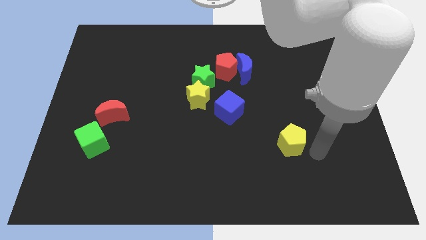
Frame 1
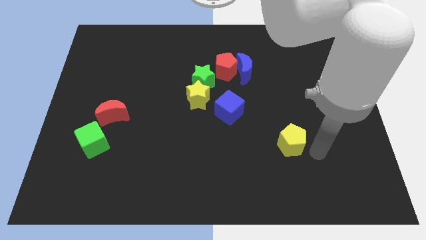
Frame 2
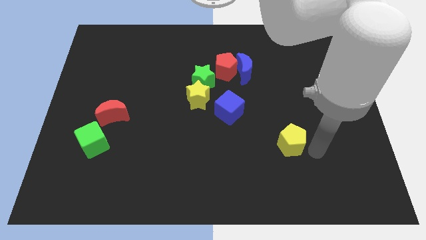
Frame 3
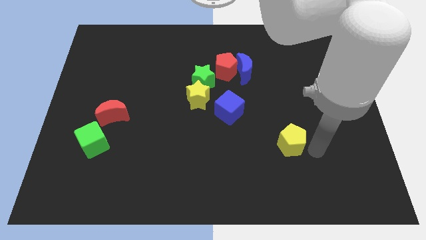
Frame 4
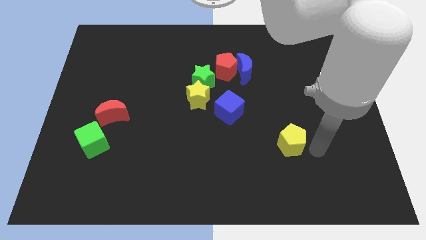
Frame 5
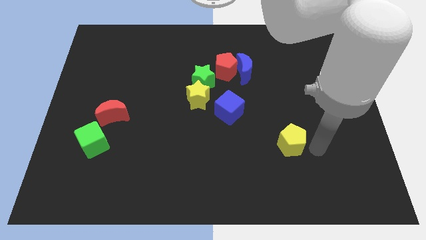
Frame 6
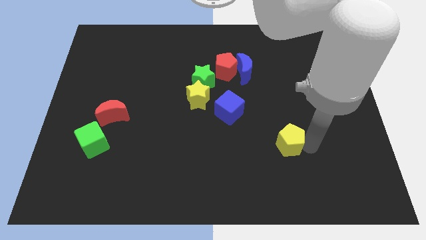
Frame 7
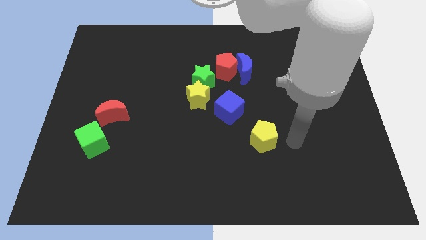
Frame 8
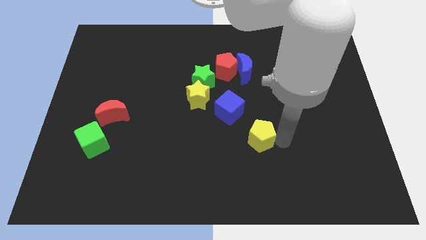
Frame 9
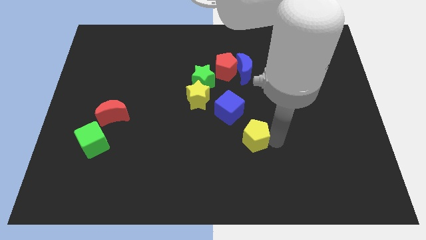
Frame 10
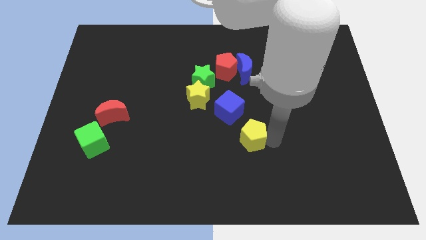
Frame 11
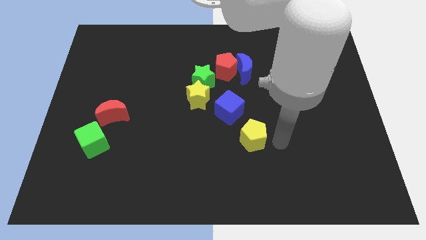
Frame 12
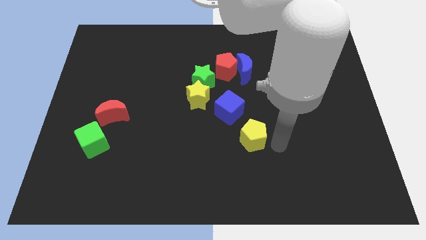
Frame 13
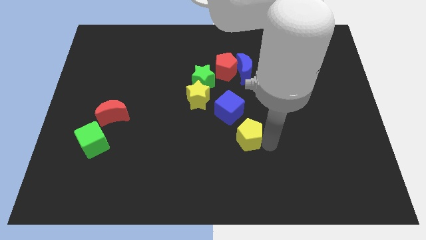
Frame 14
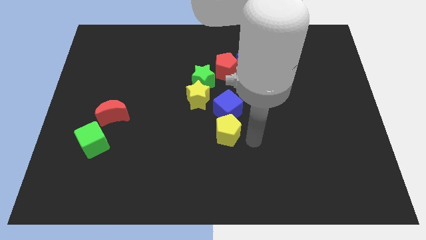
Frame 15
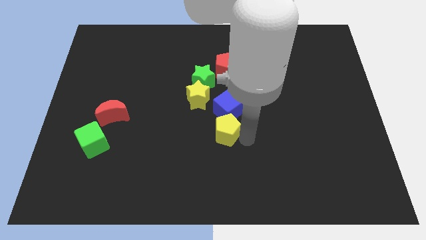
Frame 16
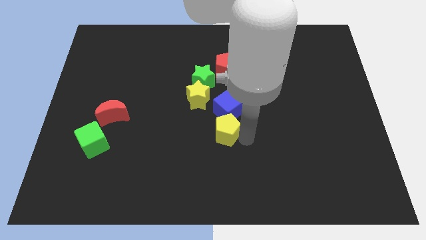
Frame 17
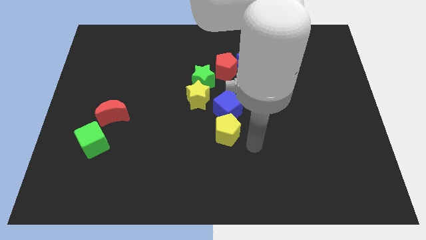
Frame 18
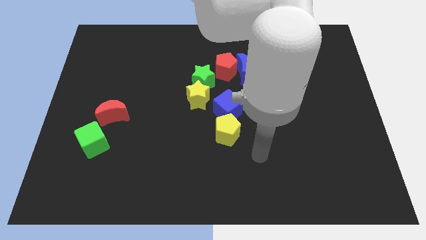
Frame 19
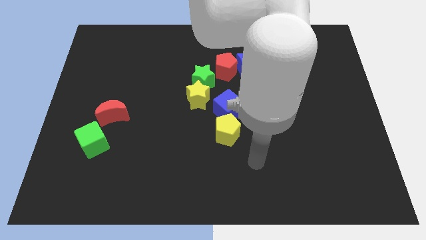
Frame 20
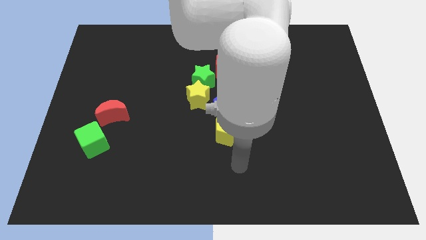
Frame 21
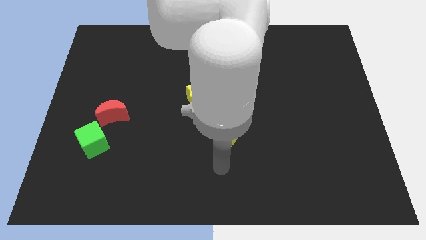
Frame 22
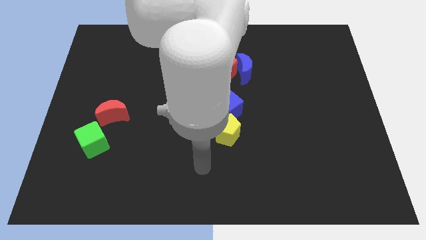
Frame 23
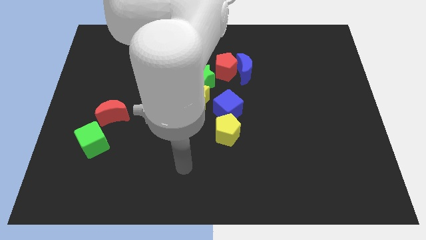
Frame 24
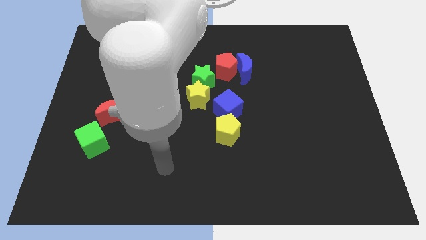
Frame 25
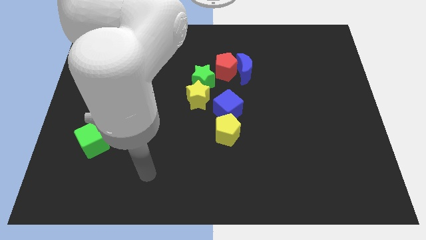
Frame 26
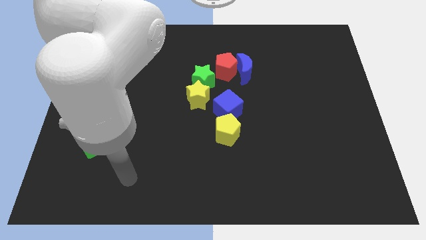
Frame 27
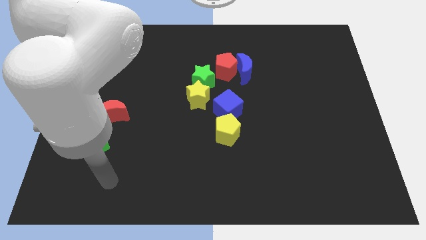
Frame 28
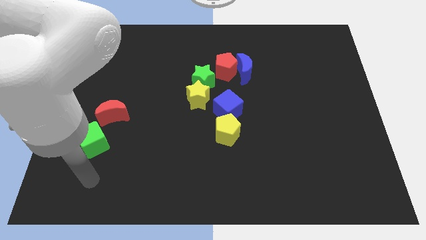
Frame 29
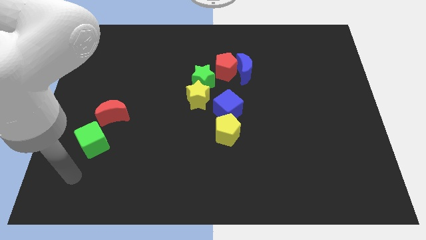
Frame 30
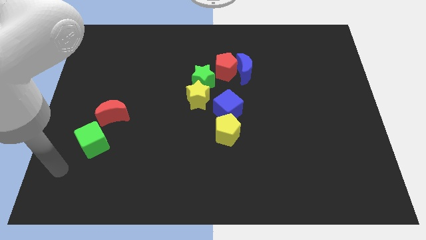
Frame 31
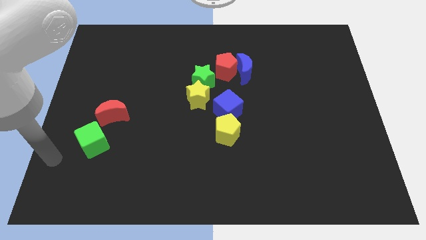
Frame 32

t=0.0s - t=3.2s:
place the yellow pentagon below the blue cube

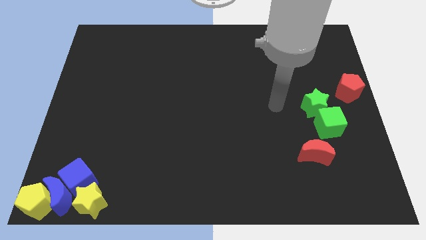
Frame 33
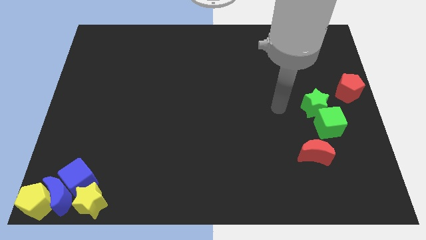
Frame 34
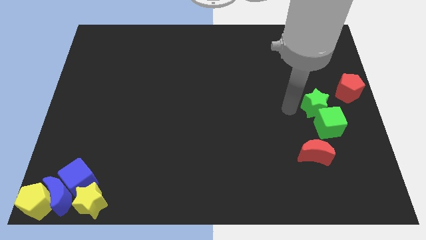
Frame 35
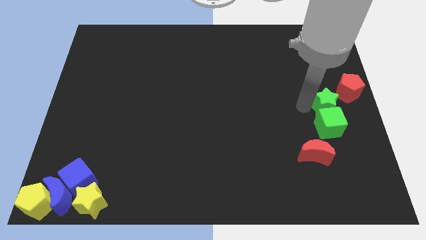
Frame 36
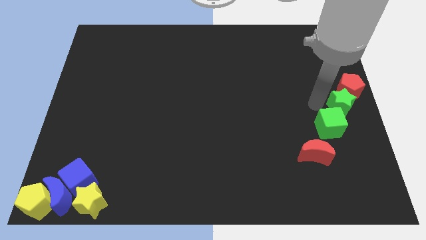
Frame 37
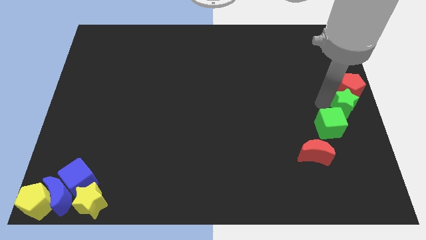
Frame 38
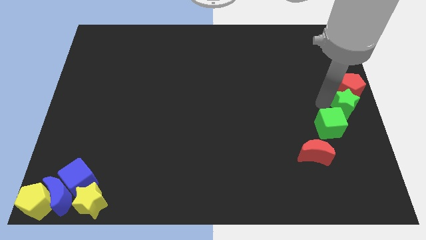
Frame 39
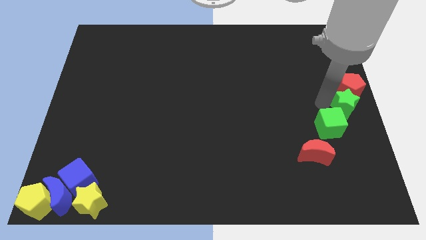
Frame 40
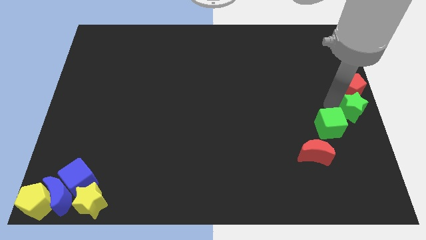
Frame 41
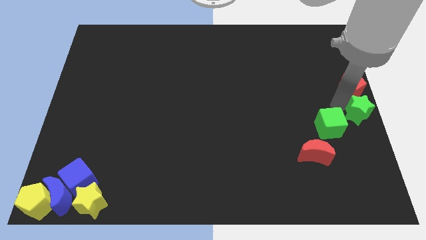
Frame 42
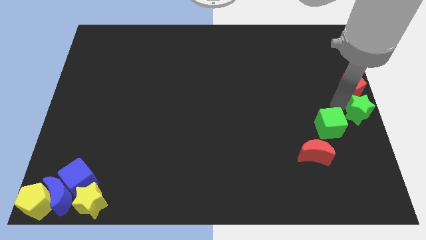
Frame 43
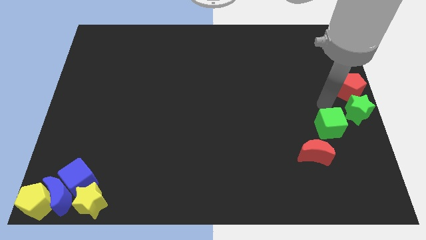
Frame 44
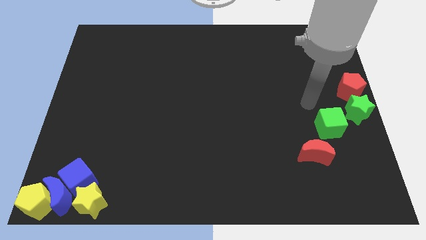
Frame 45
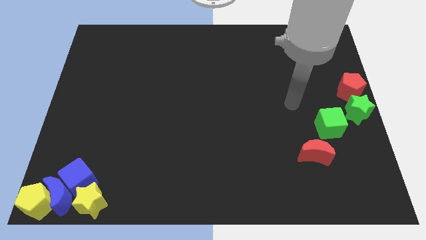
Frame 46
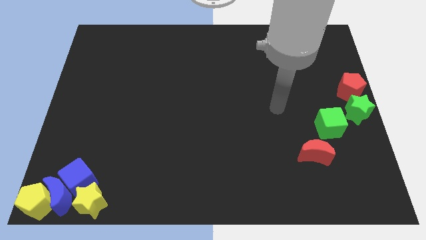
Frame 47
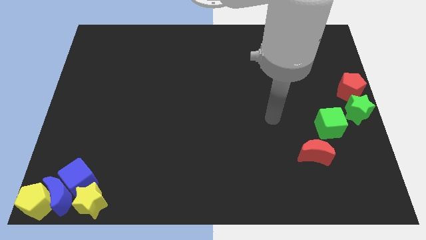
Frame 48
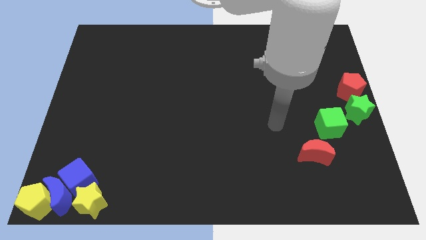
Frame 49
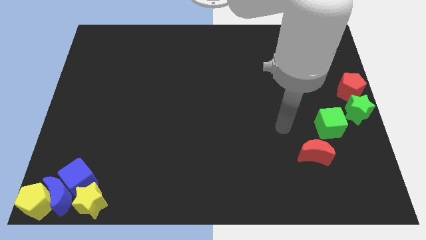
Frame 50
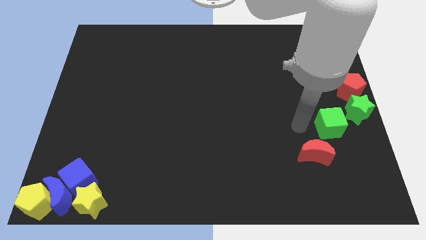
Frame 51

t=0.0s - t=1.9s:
move the green star below the red pentagon

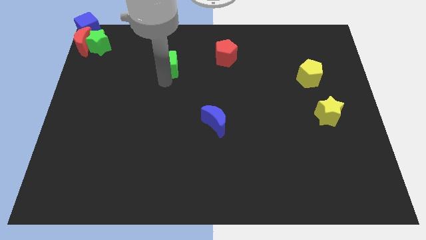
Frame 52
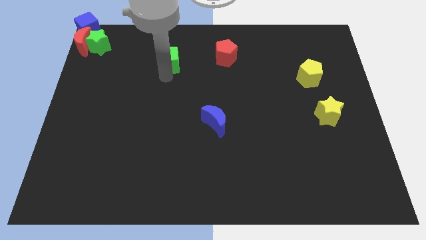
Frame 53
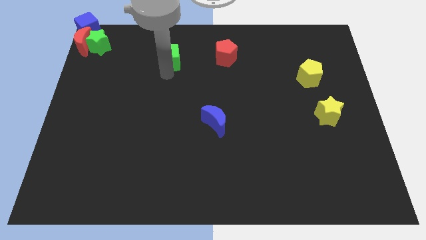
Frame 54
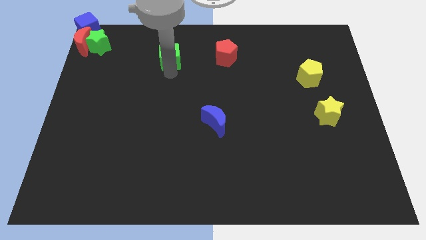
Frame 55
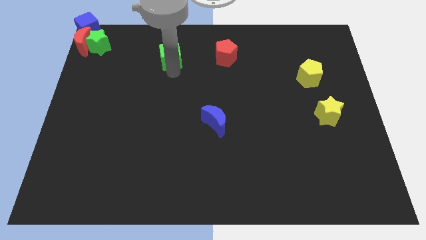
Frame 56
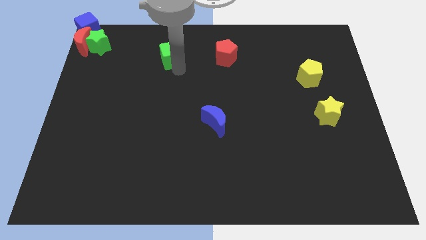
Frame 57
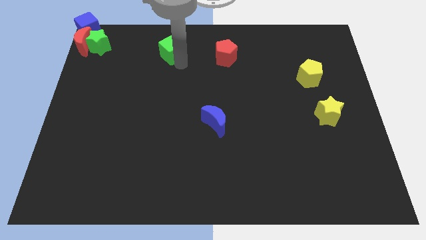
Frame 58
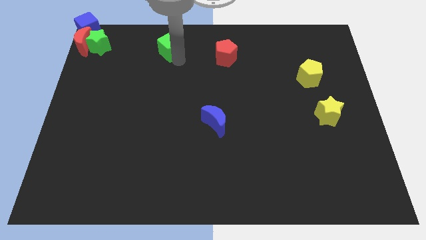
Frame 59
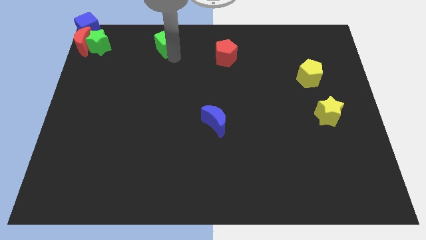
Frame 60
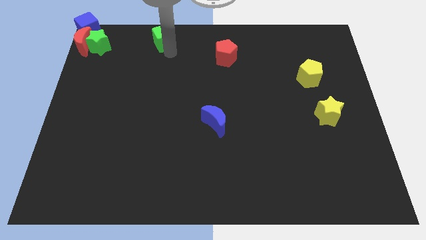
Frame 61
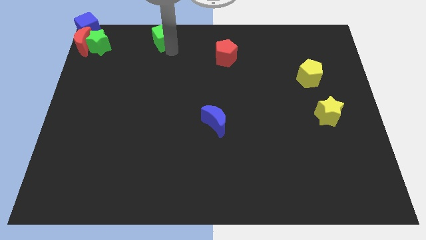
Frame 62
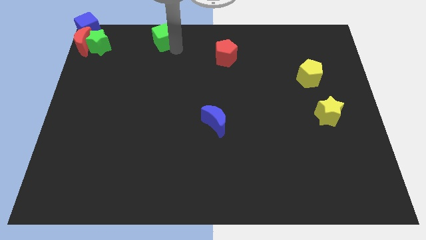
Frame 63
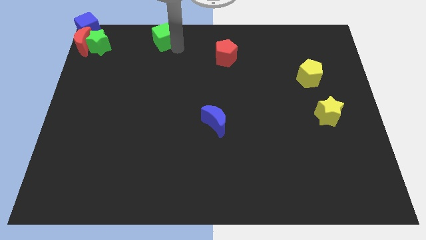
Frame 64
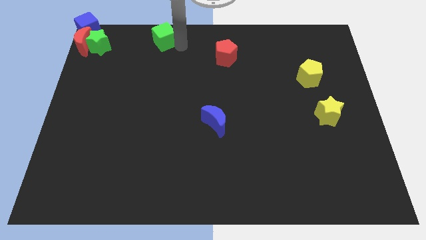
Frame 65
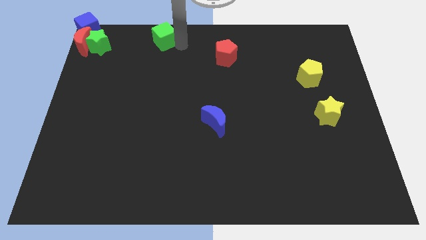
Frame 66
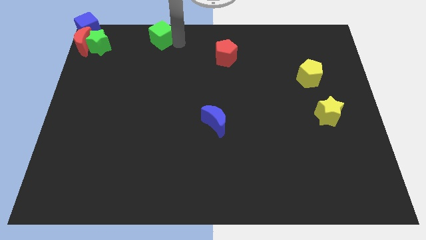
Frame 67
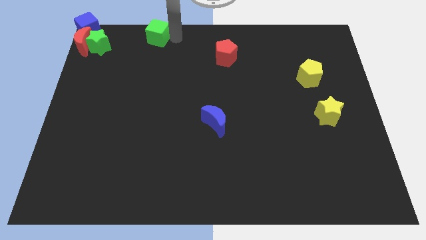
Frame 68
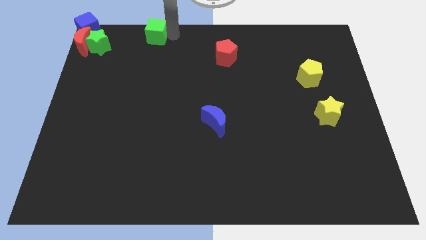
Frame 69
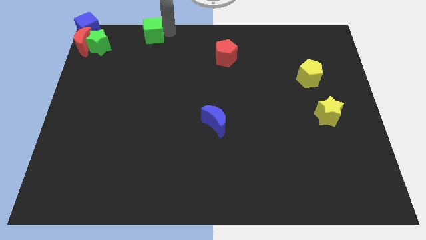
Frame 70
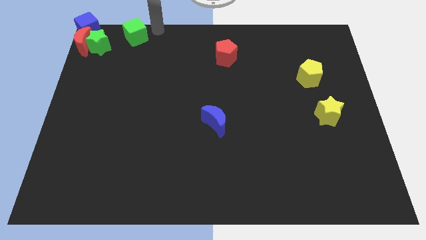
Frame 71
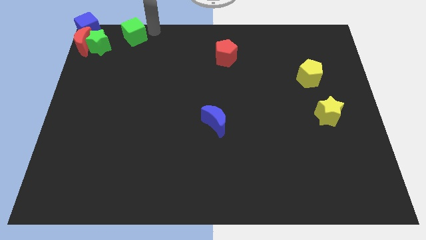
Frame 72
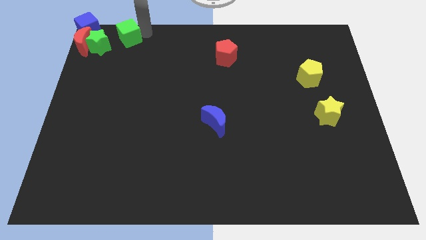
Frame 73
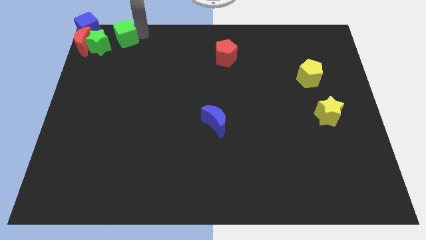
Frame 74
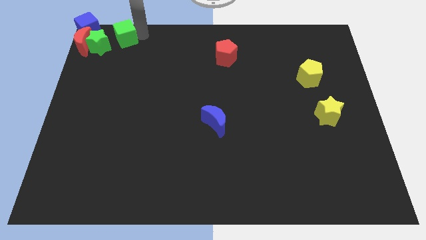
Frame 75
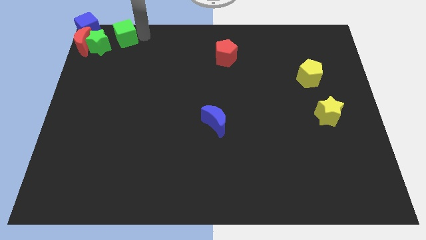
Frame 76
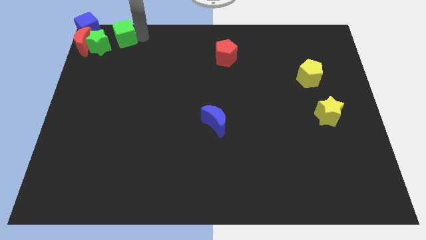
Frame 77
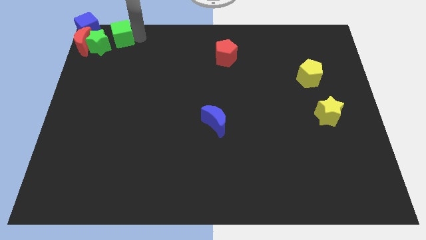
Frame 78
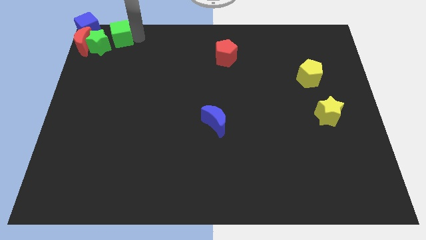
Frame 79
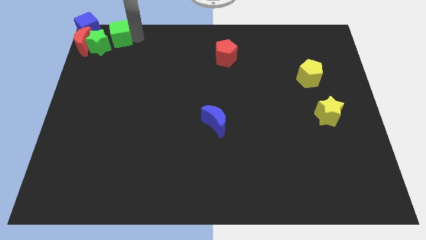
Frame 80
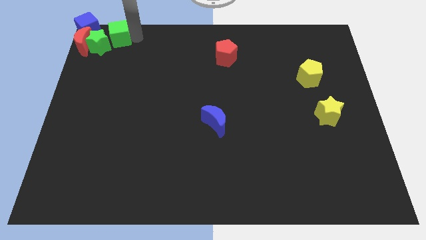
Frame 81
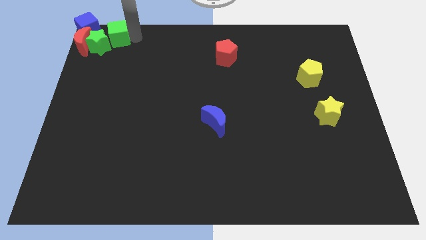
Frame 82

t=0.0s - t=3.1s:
bring the green cube at the right side of the green star

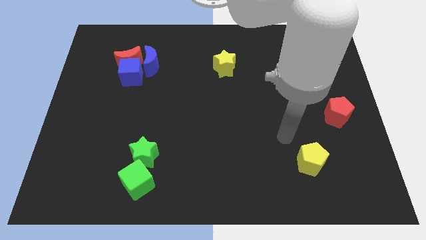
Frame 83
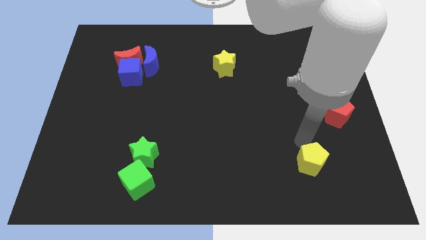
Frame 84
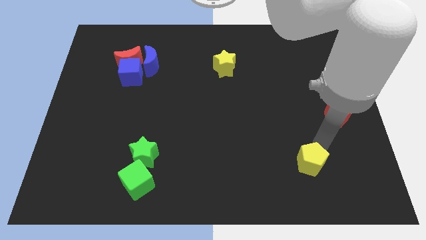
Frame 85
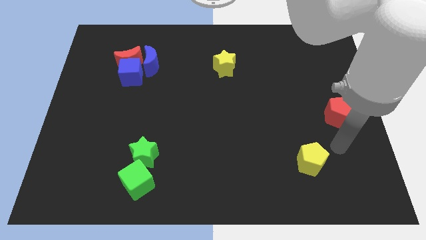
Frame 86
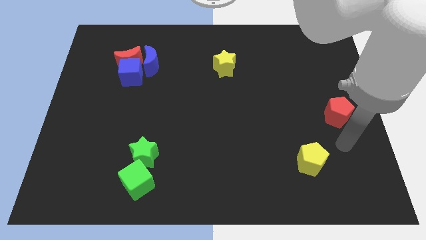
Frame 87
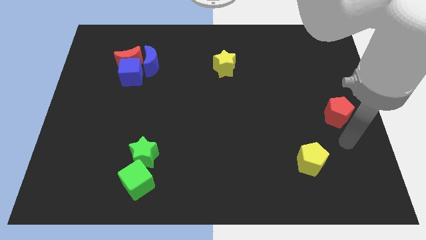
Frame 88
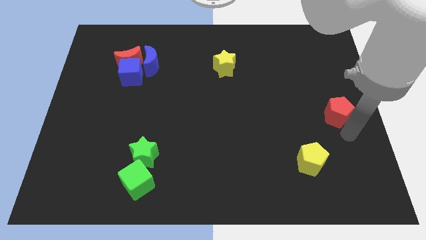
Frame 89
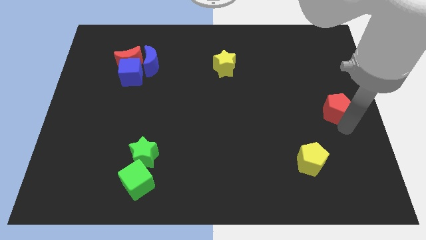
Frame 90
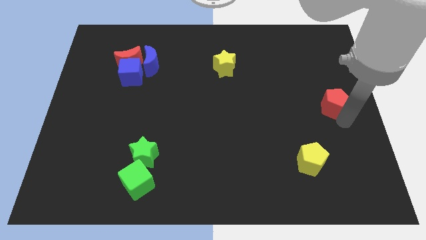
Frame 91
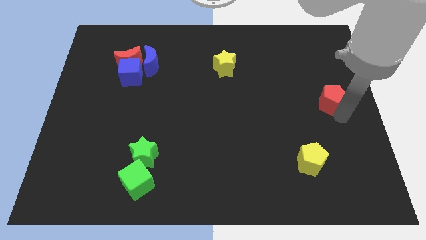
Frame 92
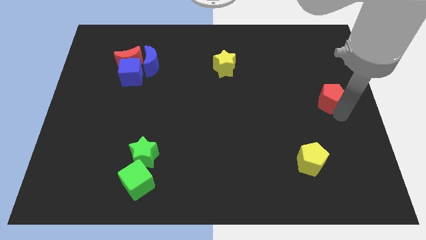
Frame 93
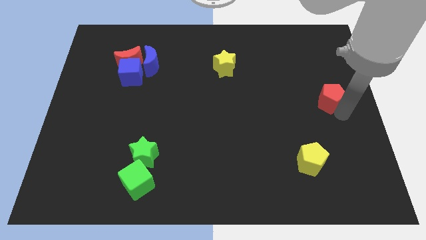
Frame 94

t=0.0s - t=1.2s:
slightly push red pentagon towards its top
